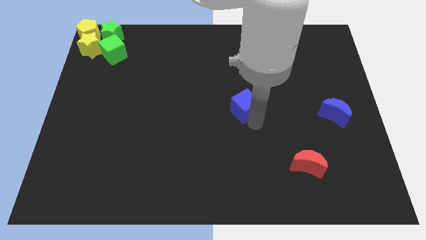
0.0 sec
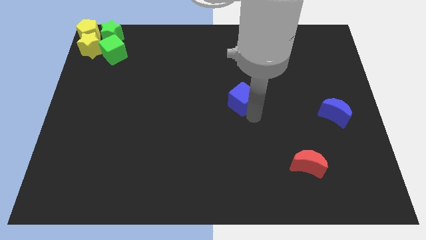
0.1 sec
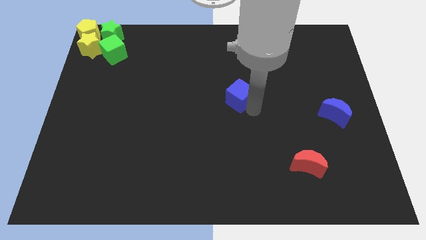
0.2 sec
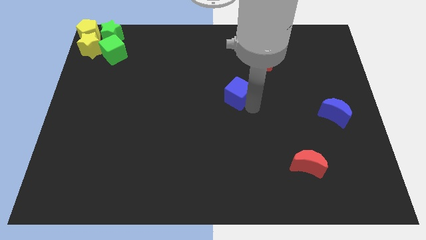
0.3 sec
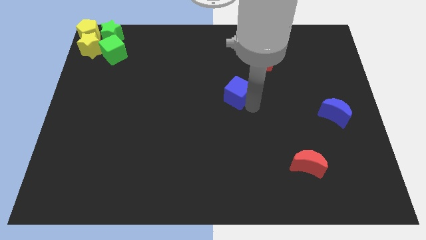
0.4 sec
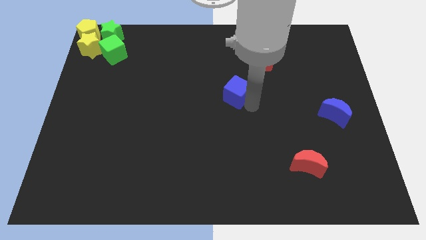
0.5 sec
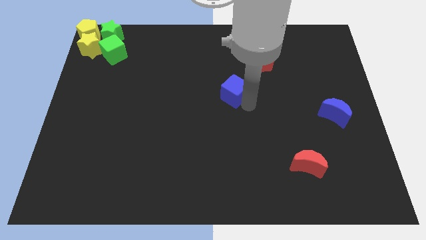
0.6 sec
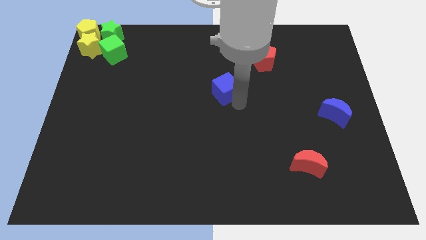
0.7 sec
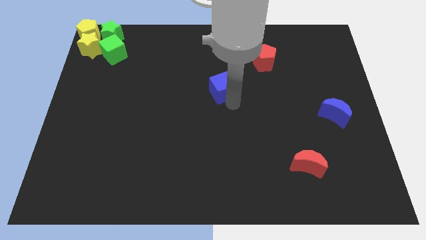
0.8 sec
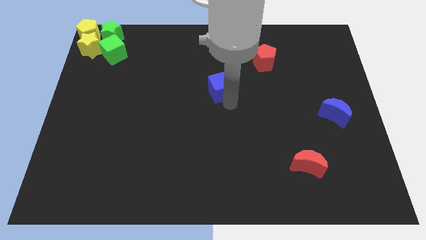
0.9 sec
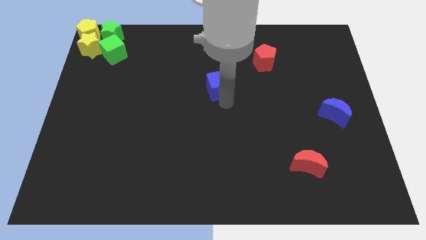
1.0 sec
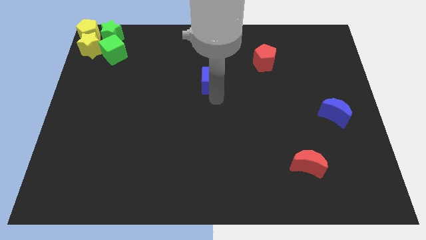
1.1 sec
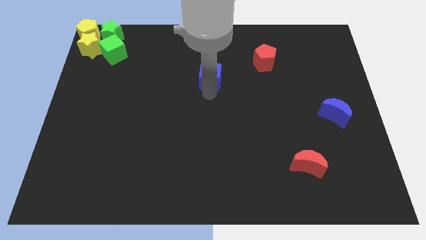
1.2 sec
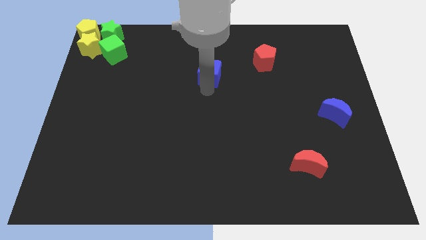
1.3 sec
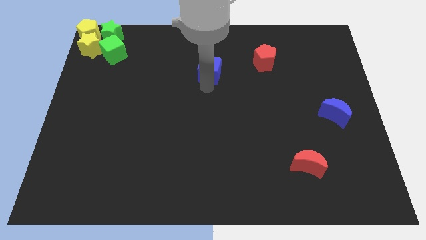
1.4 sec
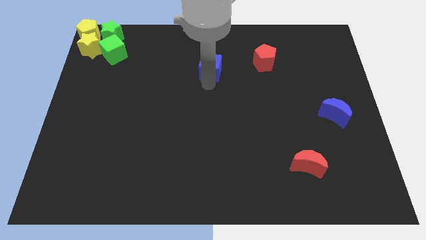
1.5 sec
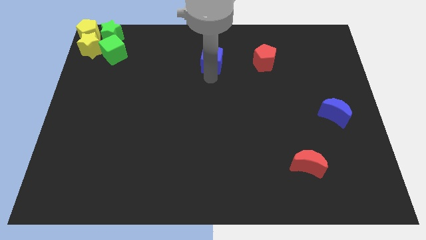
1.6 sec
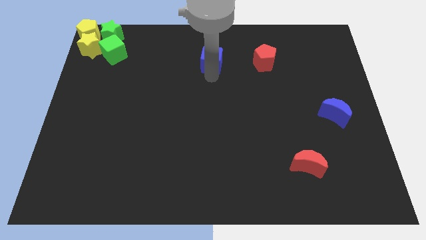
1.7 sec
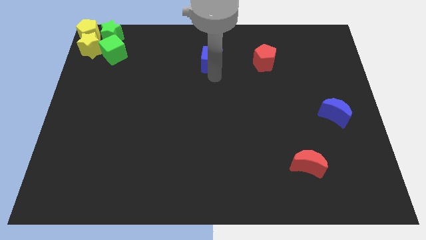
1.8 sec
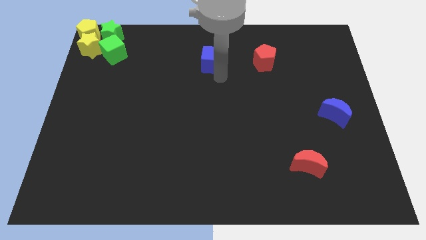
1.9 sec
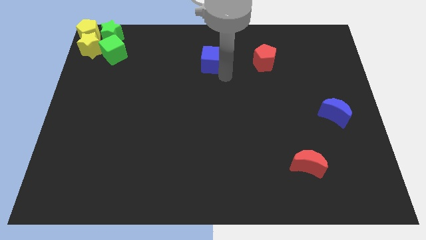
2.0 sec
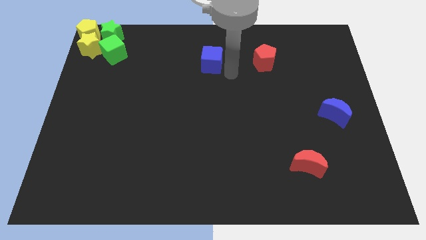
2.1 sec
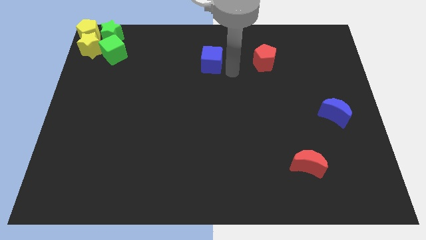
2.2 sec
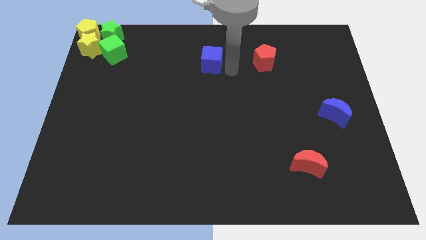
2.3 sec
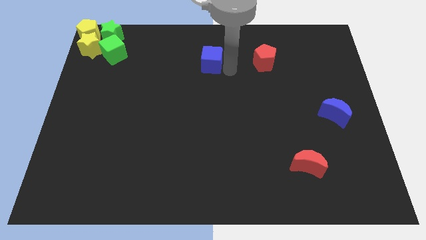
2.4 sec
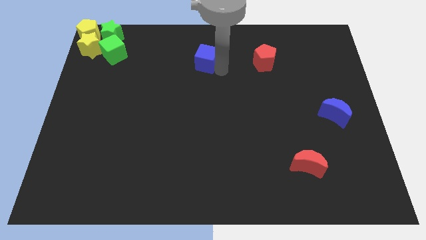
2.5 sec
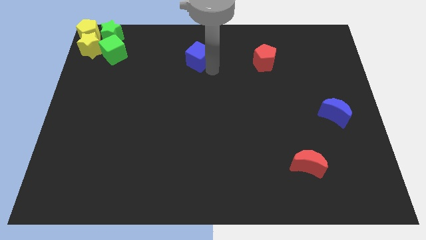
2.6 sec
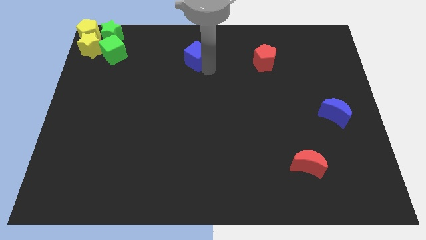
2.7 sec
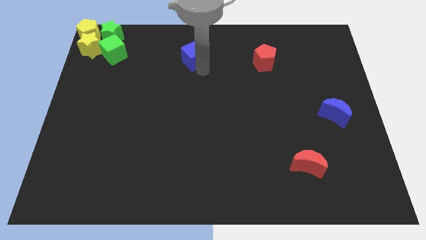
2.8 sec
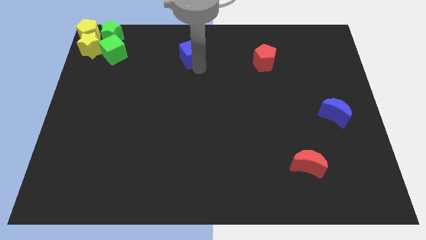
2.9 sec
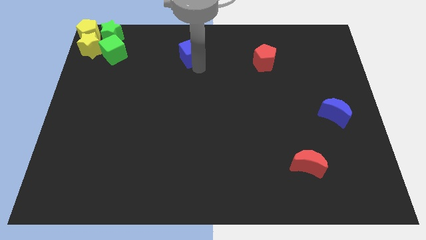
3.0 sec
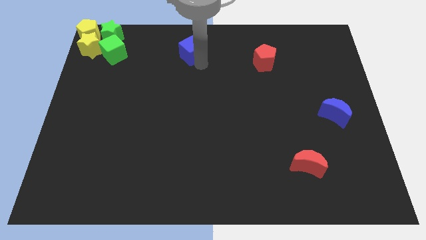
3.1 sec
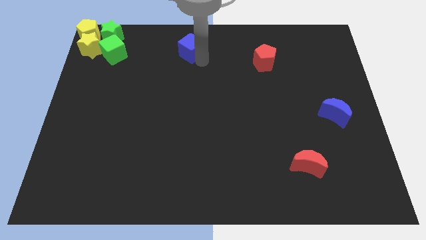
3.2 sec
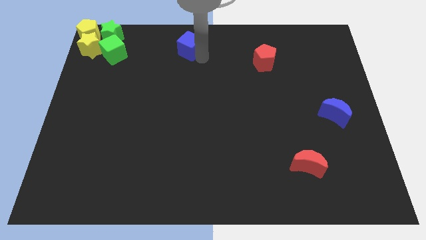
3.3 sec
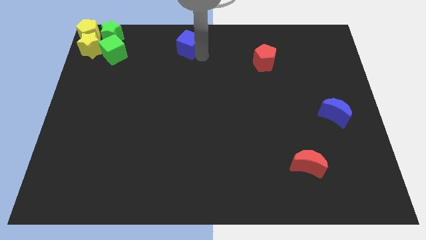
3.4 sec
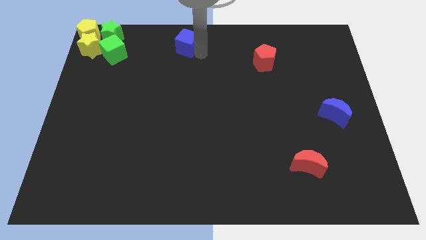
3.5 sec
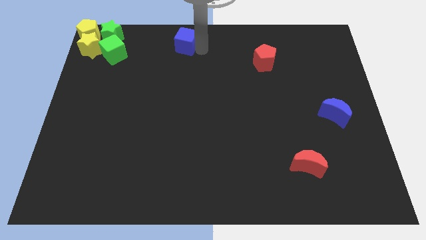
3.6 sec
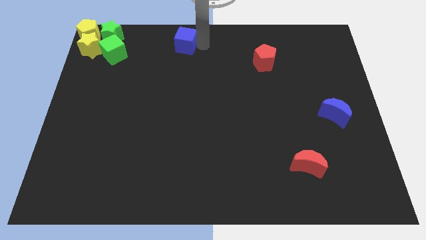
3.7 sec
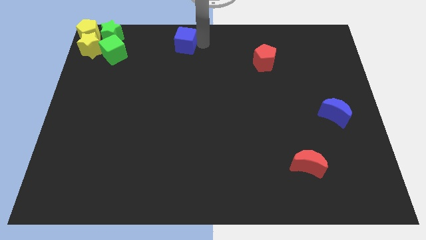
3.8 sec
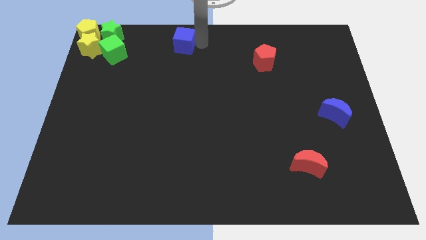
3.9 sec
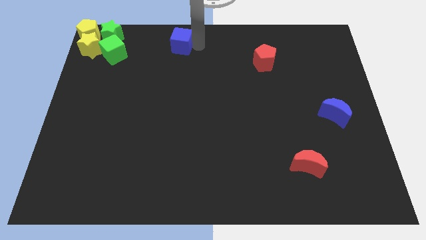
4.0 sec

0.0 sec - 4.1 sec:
move the blue cube towards the top center of the board

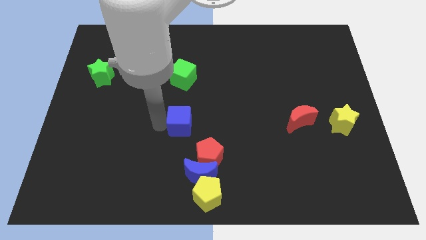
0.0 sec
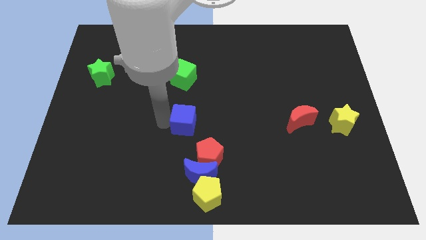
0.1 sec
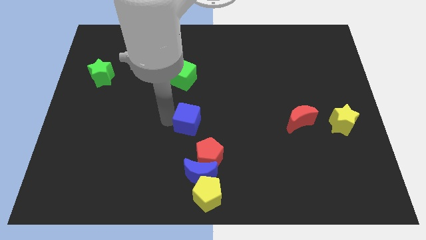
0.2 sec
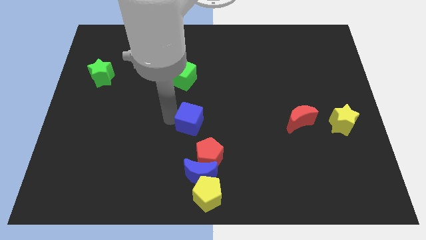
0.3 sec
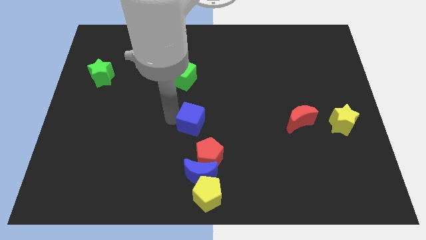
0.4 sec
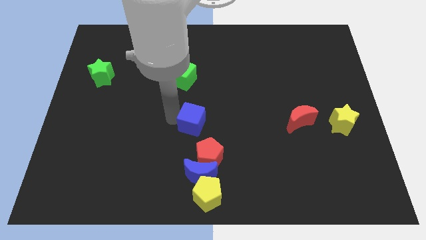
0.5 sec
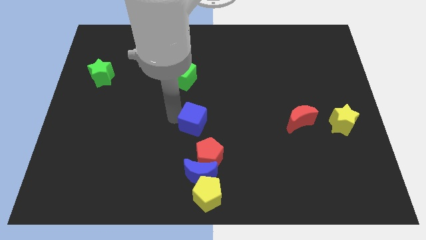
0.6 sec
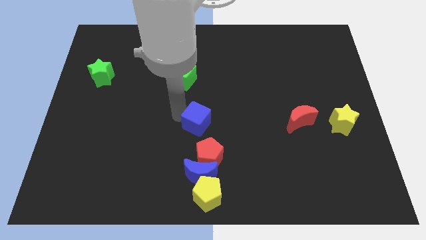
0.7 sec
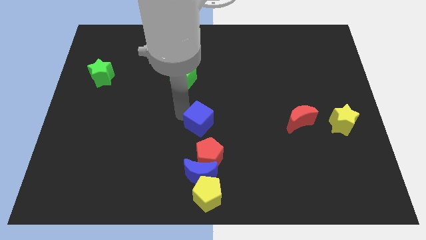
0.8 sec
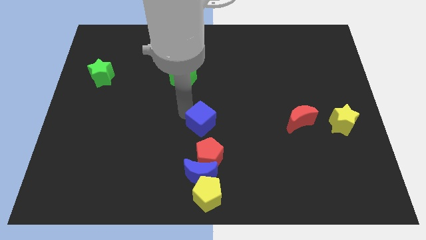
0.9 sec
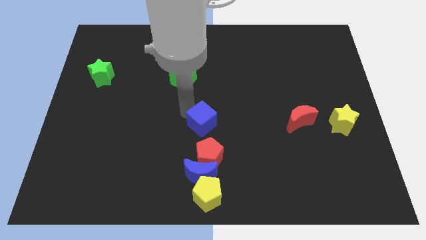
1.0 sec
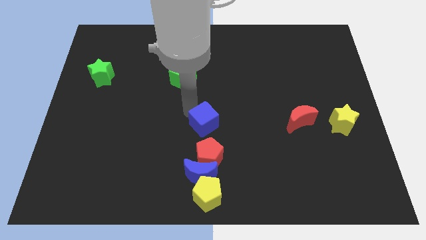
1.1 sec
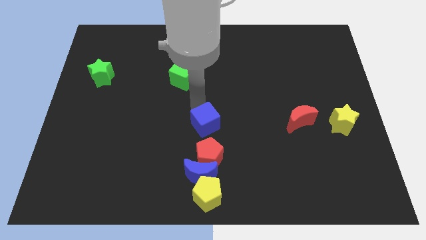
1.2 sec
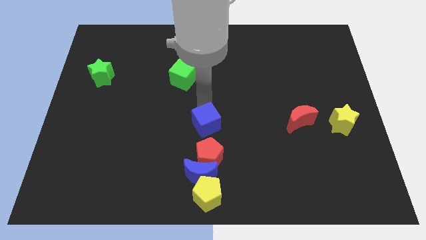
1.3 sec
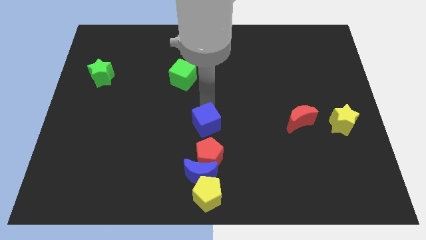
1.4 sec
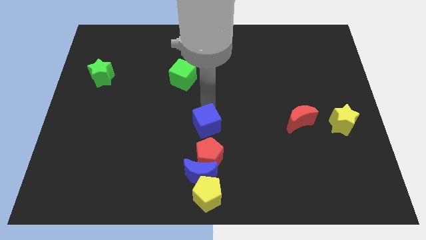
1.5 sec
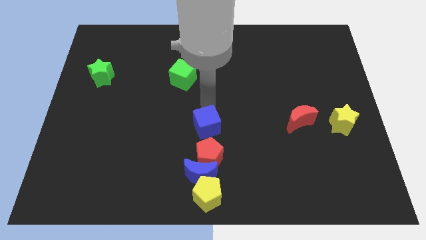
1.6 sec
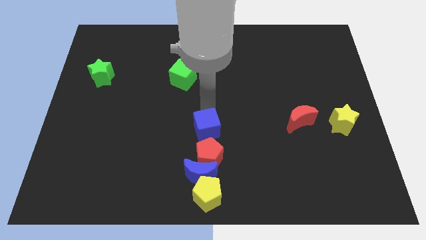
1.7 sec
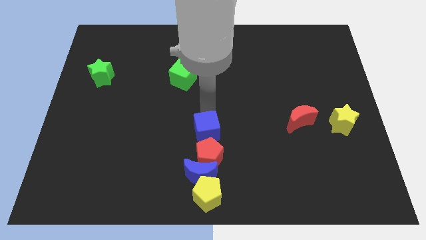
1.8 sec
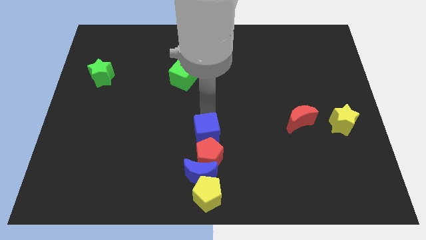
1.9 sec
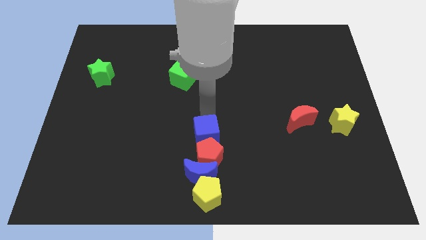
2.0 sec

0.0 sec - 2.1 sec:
place the blue cube above the red pentagon

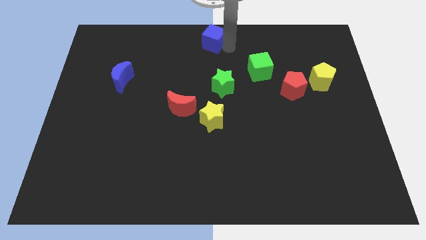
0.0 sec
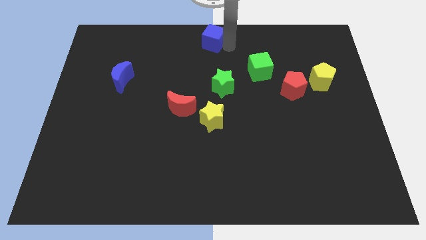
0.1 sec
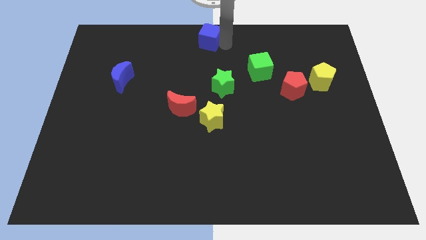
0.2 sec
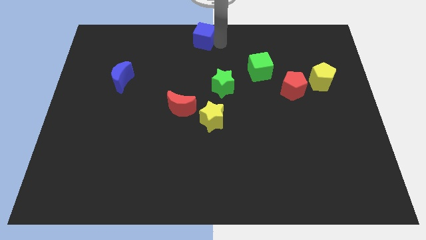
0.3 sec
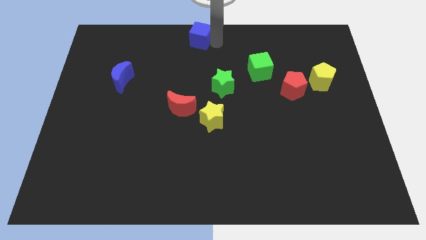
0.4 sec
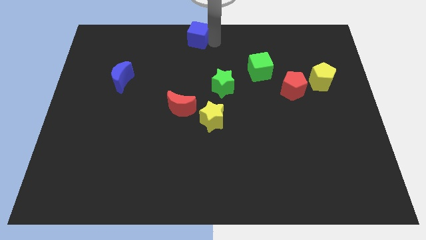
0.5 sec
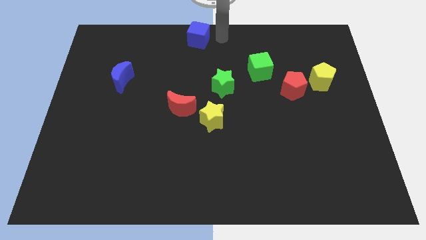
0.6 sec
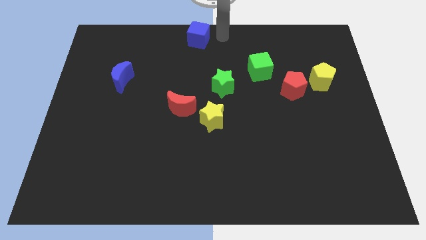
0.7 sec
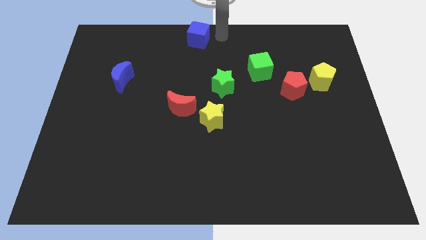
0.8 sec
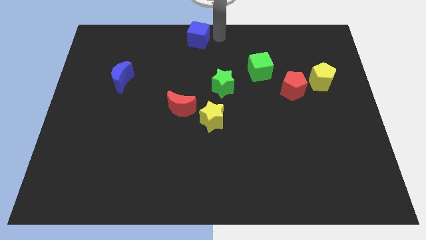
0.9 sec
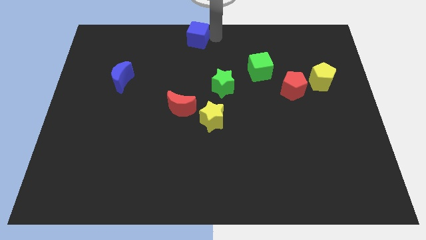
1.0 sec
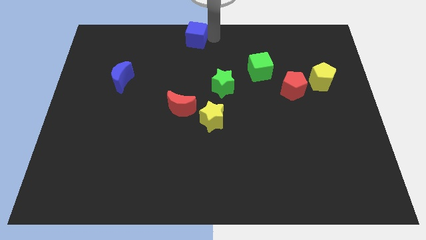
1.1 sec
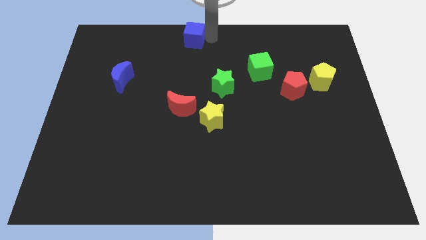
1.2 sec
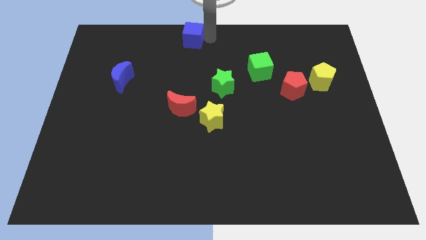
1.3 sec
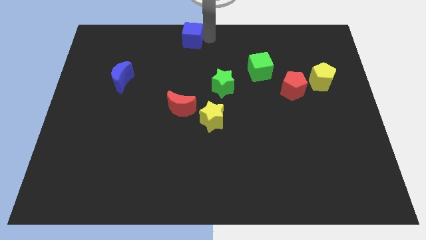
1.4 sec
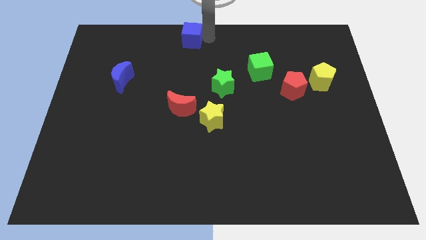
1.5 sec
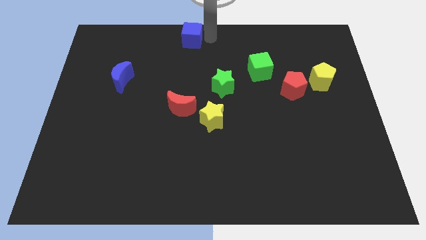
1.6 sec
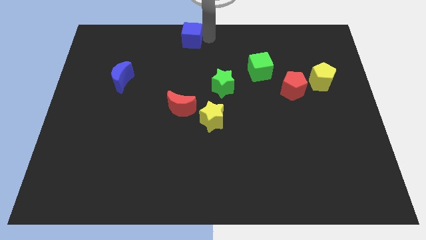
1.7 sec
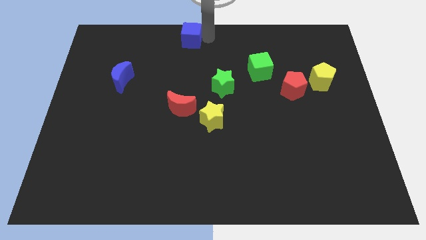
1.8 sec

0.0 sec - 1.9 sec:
push the blue cube vertically to the top of the red moon

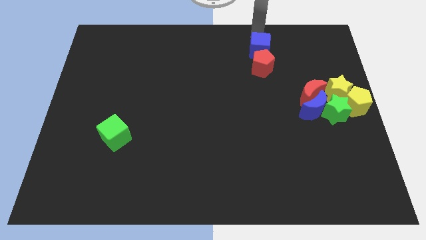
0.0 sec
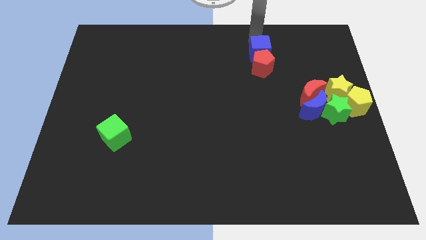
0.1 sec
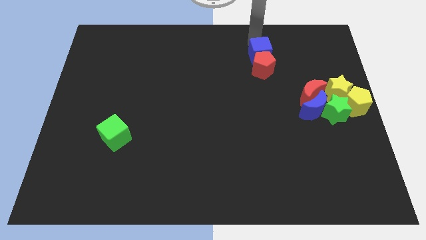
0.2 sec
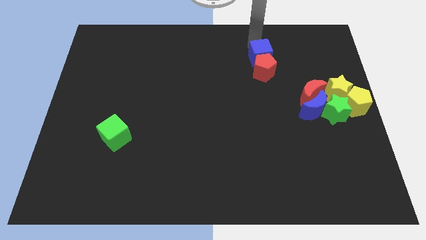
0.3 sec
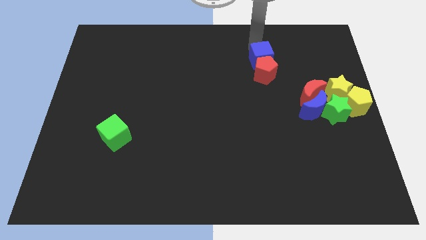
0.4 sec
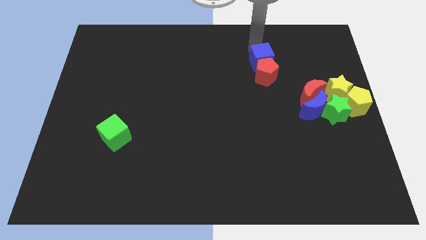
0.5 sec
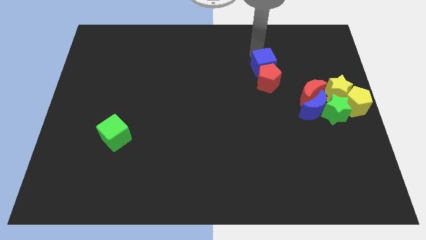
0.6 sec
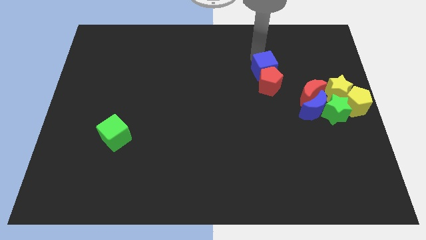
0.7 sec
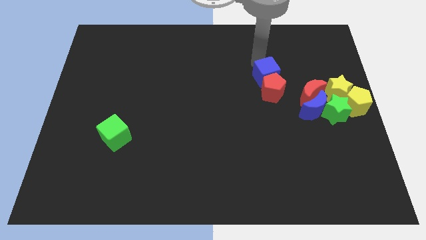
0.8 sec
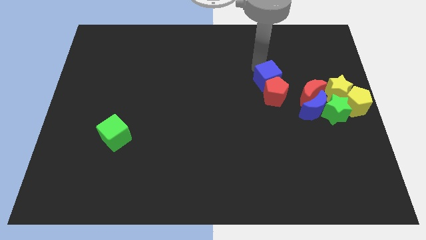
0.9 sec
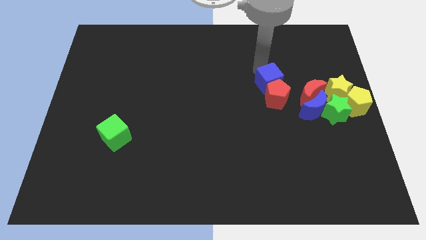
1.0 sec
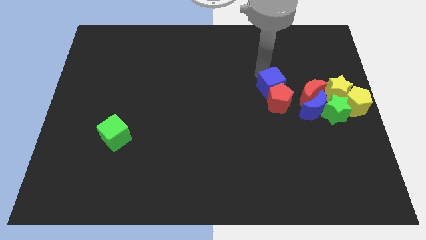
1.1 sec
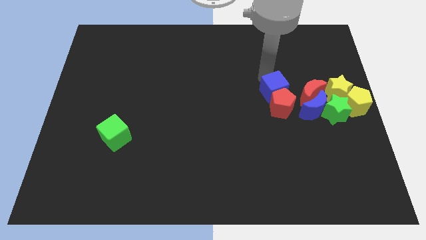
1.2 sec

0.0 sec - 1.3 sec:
move the red pentagon down with the blue cube
